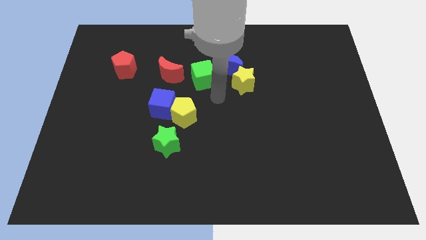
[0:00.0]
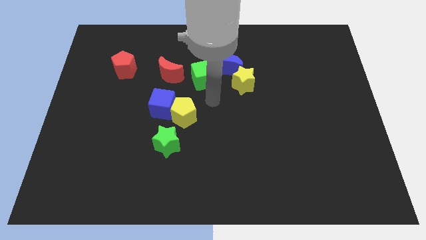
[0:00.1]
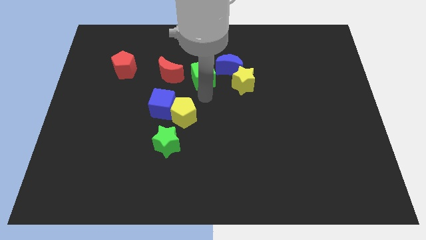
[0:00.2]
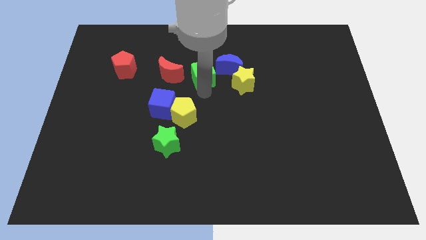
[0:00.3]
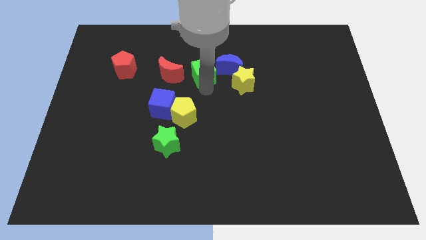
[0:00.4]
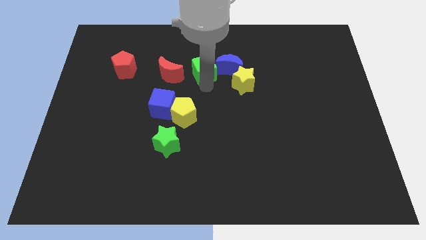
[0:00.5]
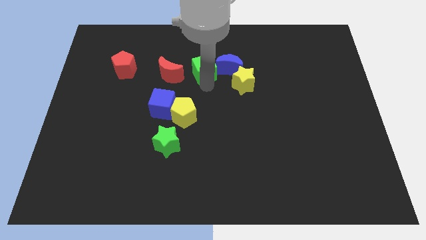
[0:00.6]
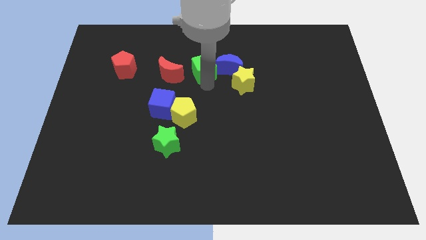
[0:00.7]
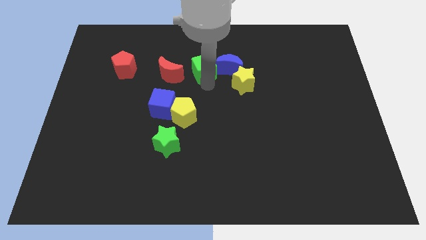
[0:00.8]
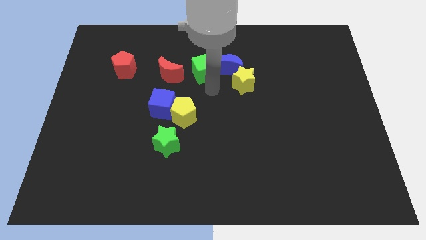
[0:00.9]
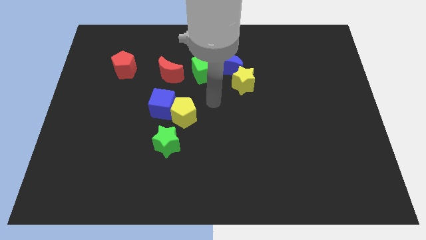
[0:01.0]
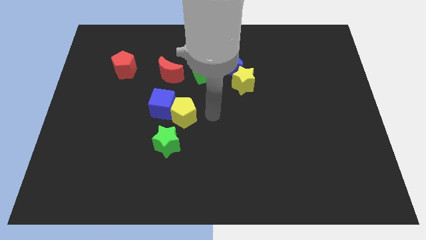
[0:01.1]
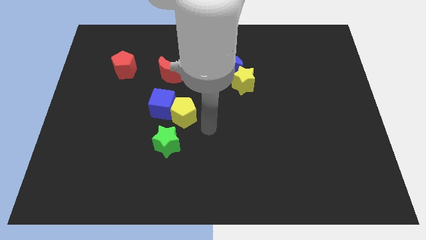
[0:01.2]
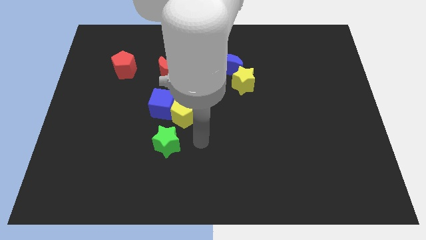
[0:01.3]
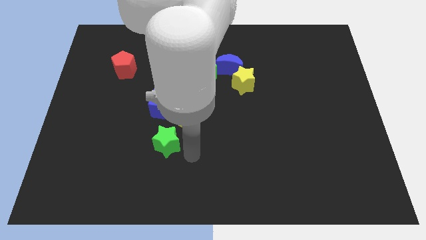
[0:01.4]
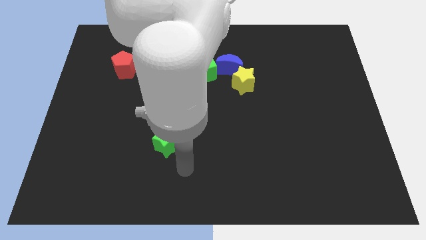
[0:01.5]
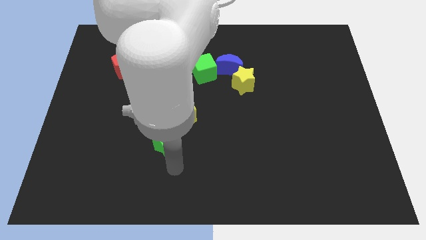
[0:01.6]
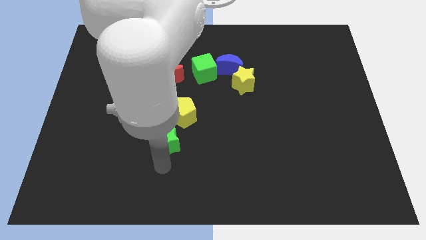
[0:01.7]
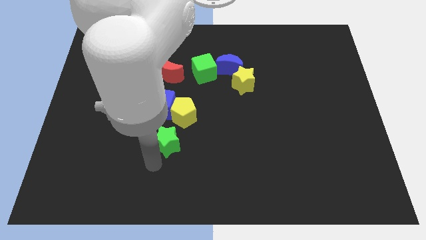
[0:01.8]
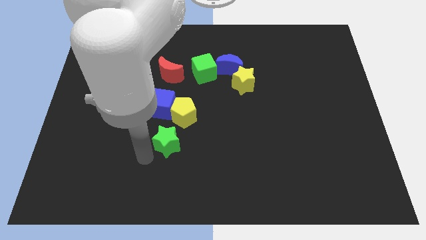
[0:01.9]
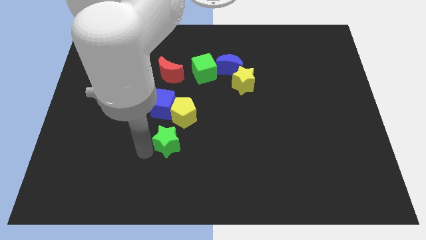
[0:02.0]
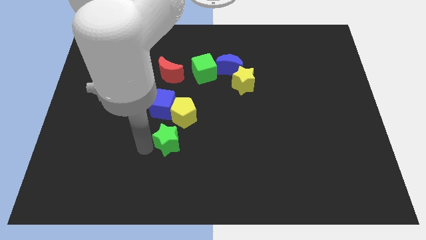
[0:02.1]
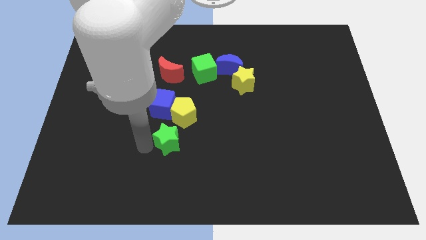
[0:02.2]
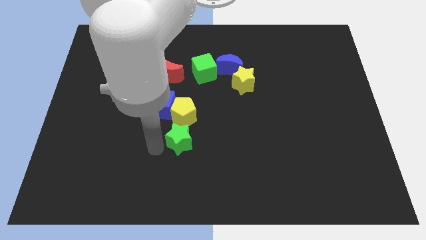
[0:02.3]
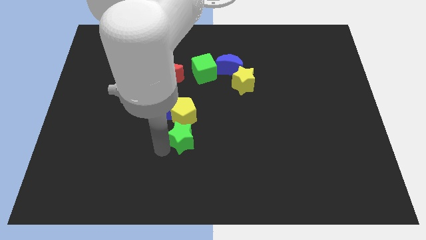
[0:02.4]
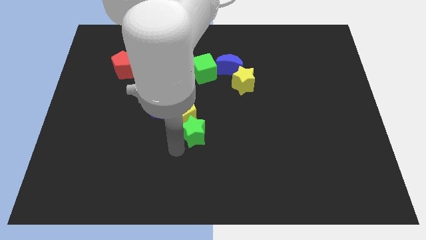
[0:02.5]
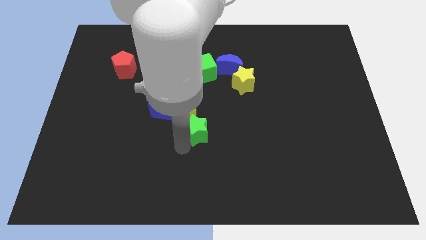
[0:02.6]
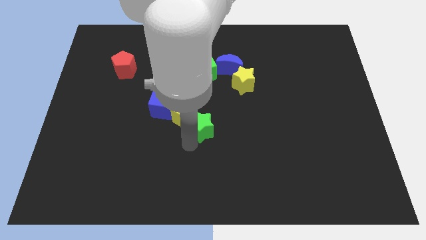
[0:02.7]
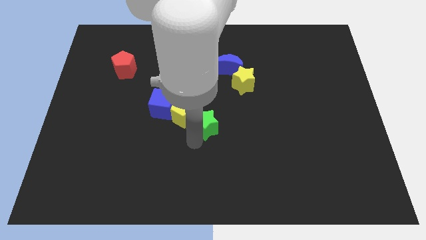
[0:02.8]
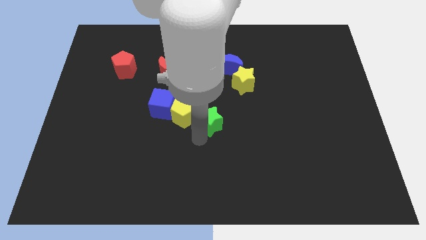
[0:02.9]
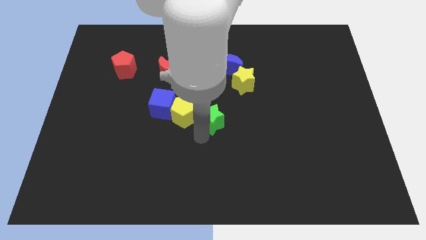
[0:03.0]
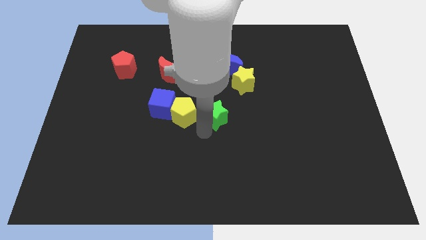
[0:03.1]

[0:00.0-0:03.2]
move the green star to the right of the yellow pentagon

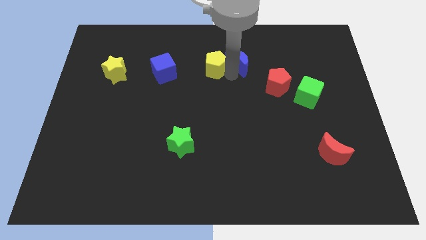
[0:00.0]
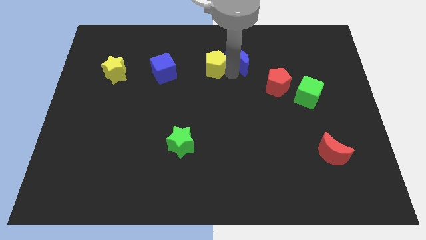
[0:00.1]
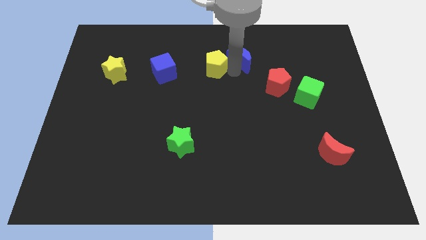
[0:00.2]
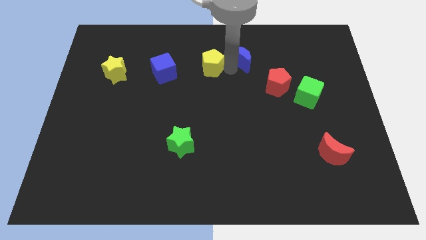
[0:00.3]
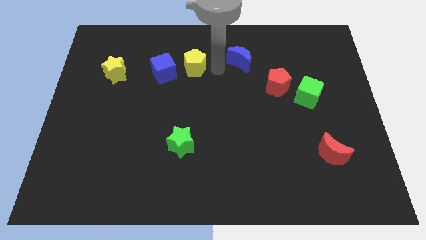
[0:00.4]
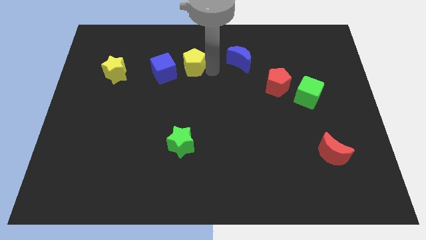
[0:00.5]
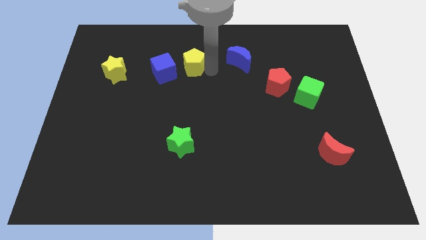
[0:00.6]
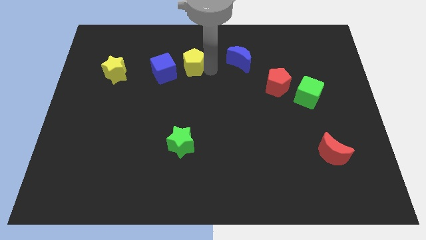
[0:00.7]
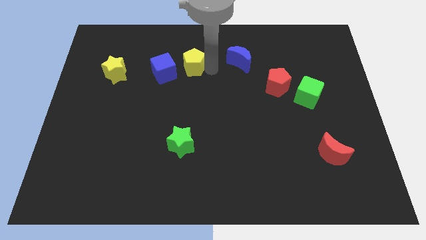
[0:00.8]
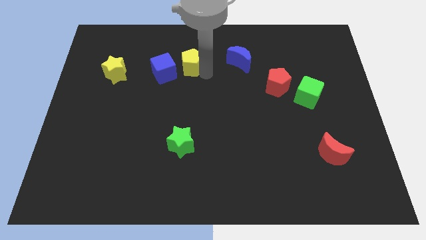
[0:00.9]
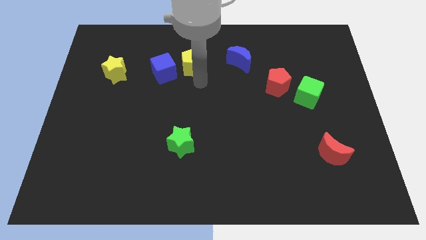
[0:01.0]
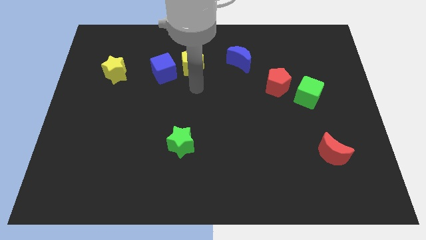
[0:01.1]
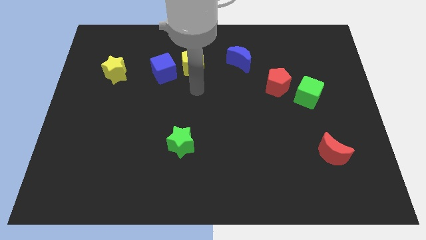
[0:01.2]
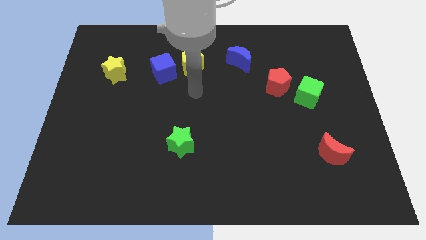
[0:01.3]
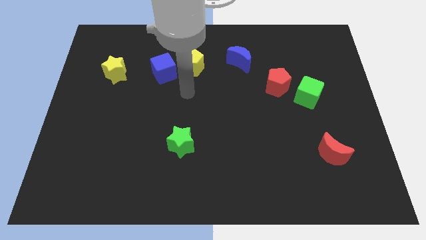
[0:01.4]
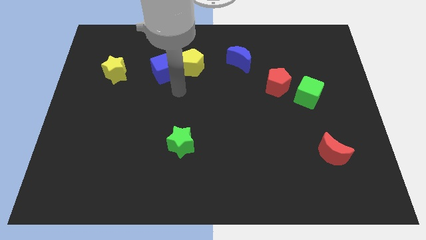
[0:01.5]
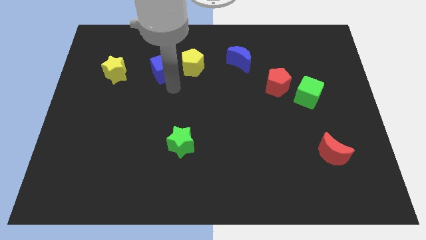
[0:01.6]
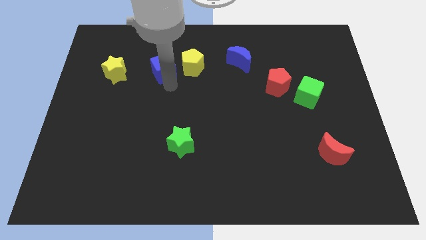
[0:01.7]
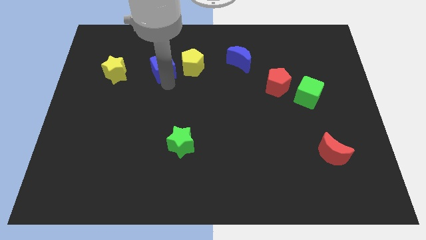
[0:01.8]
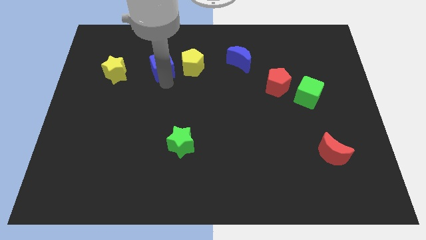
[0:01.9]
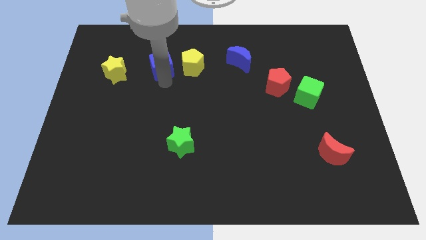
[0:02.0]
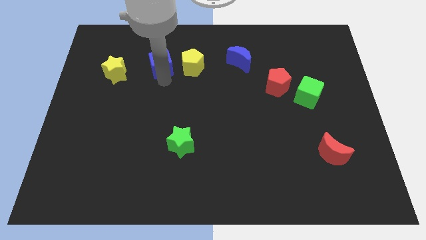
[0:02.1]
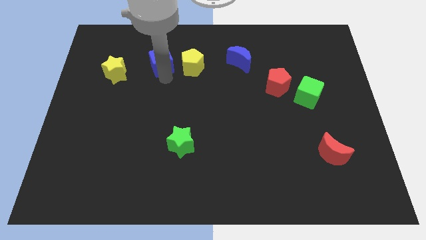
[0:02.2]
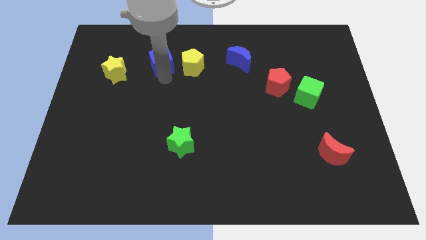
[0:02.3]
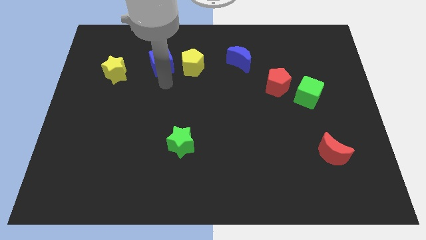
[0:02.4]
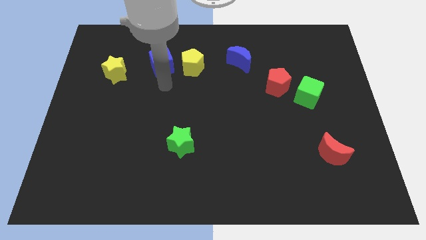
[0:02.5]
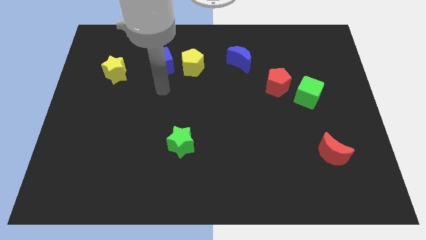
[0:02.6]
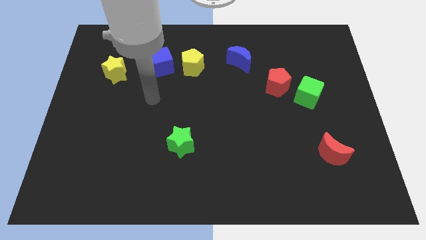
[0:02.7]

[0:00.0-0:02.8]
adjust the yellow pentagon and the blue cube to form a horizontal line

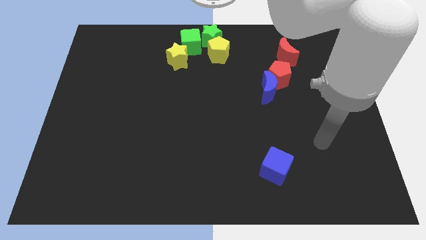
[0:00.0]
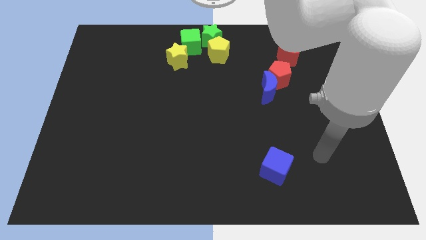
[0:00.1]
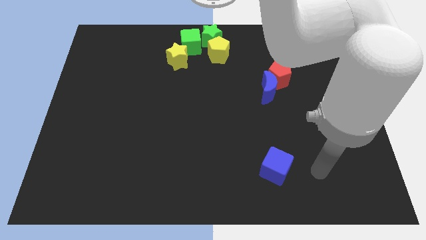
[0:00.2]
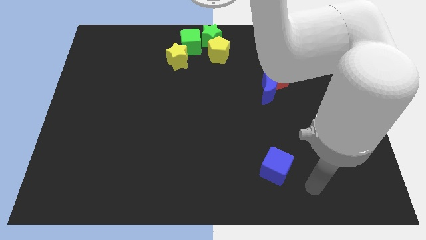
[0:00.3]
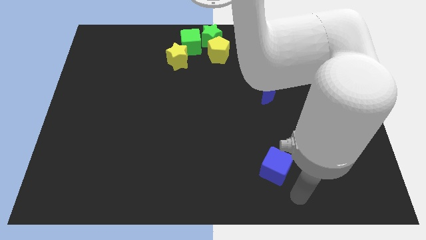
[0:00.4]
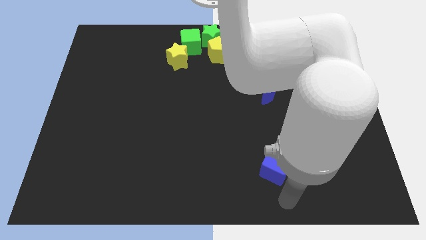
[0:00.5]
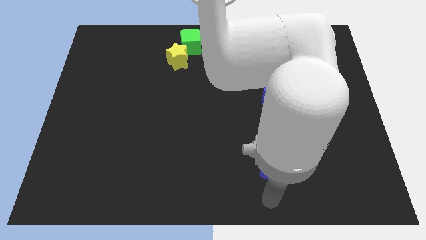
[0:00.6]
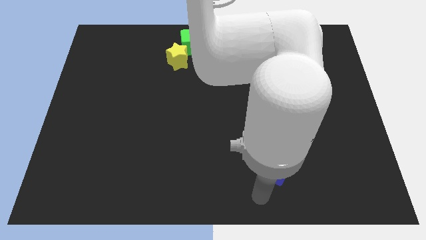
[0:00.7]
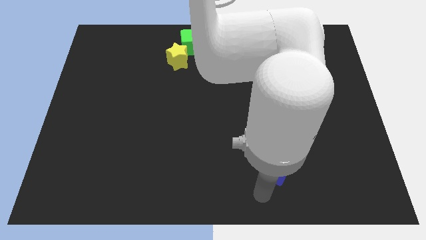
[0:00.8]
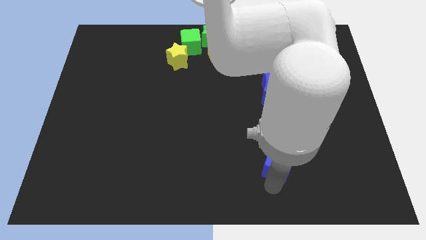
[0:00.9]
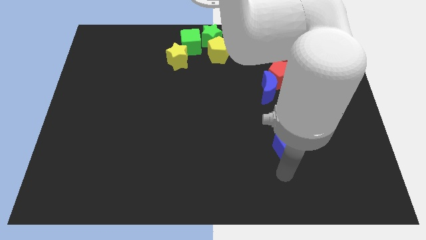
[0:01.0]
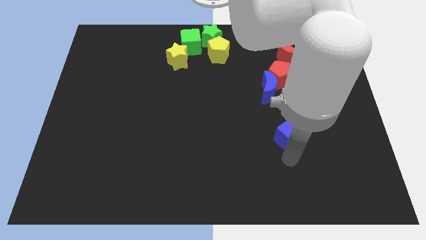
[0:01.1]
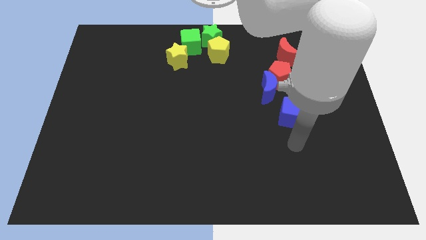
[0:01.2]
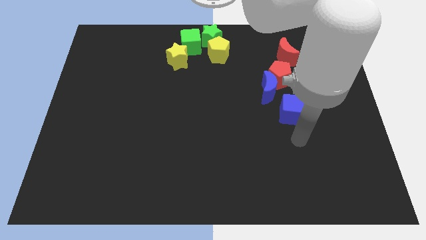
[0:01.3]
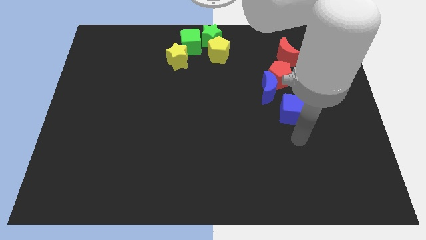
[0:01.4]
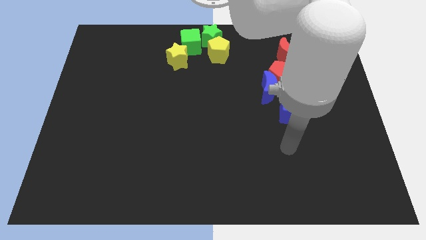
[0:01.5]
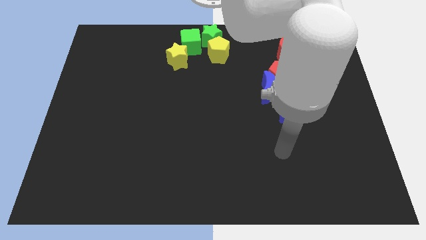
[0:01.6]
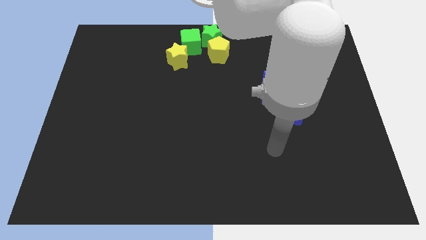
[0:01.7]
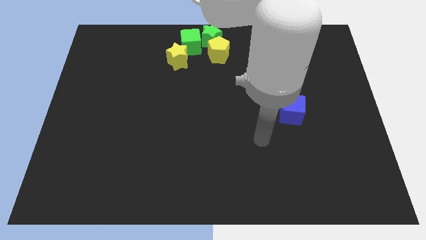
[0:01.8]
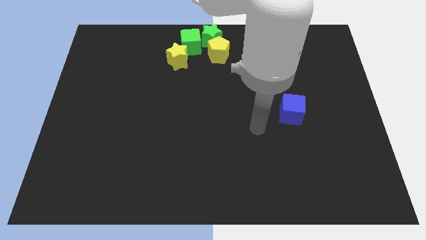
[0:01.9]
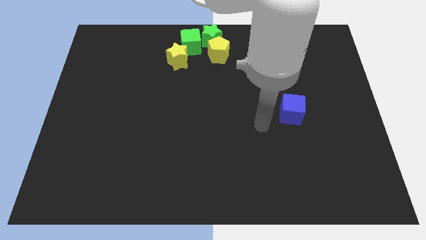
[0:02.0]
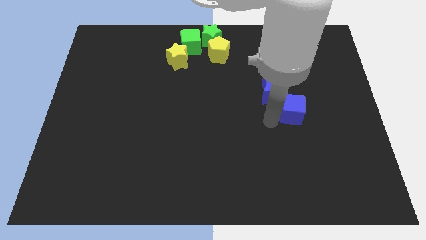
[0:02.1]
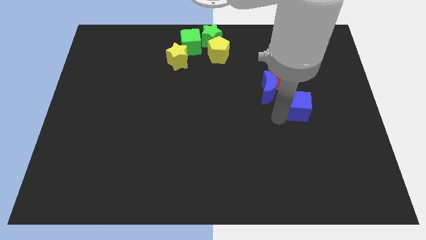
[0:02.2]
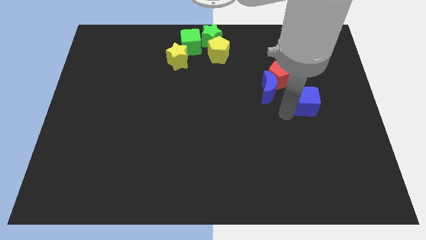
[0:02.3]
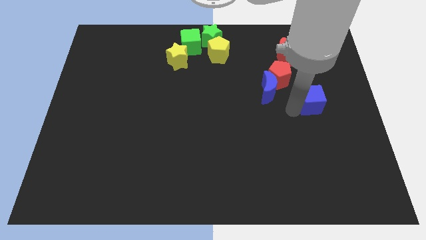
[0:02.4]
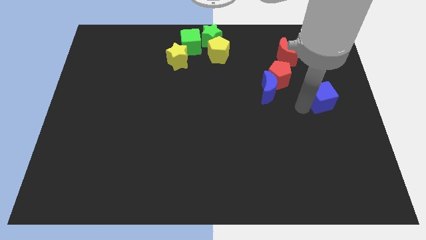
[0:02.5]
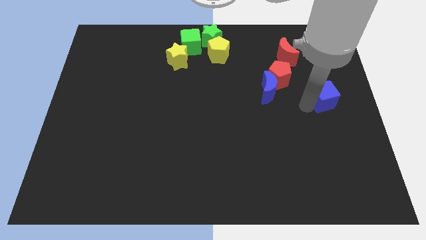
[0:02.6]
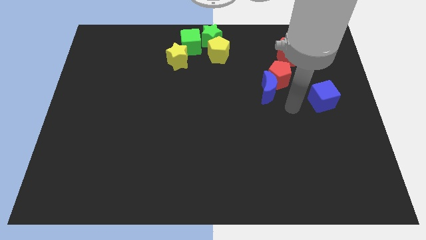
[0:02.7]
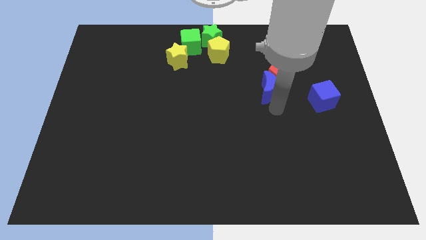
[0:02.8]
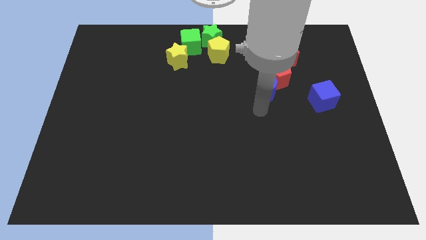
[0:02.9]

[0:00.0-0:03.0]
push the blue cube to the bottom right of the red crescent
